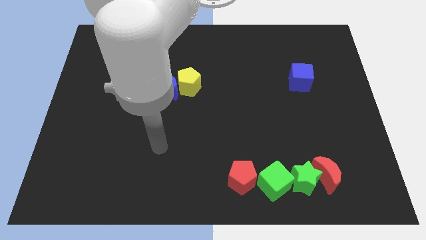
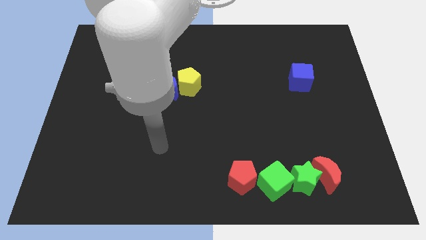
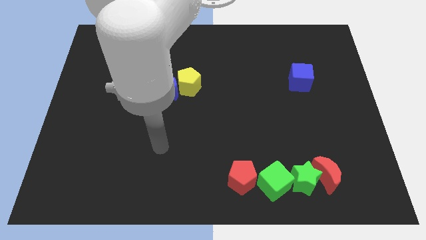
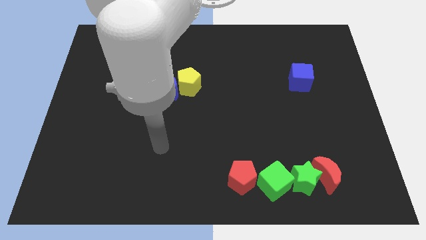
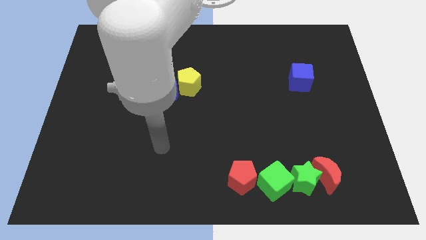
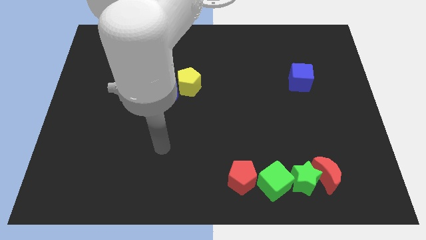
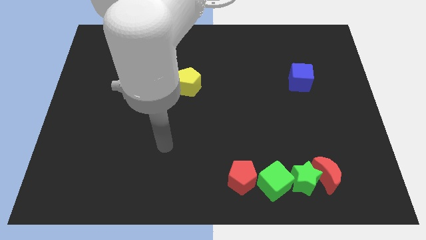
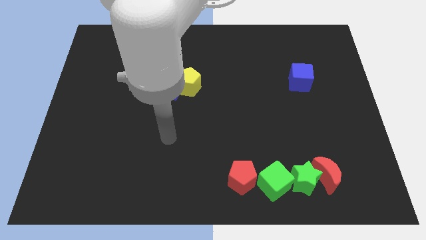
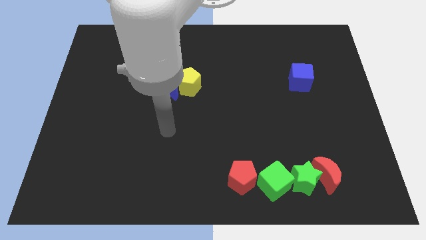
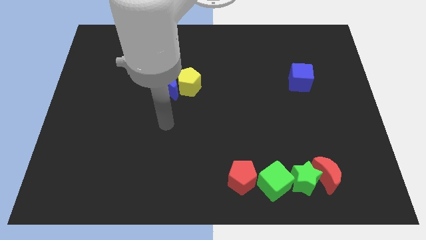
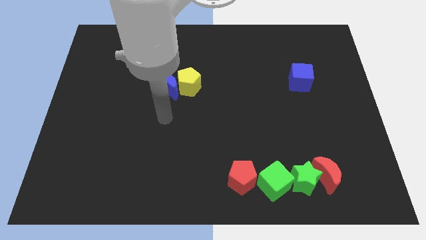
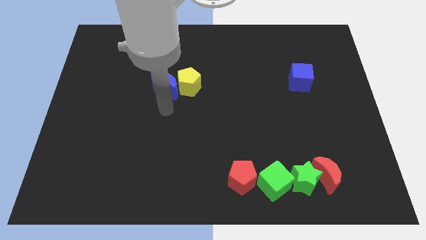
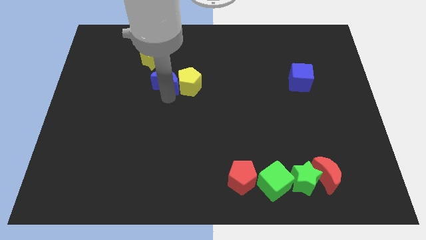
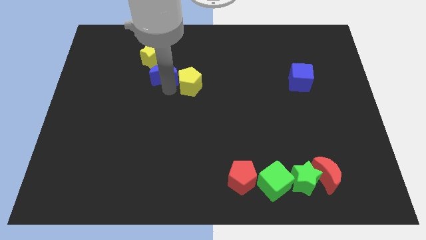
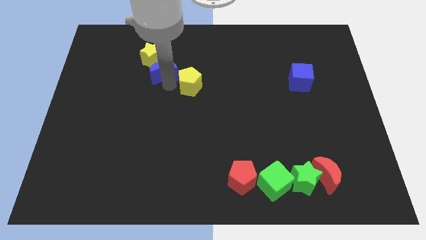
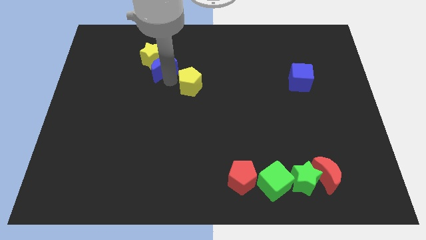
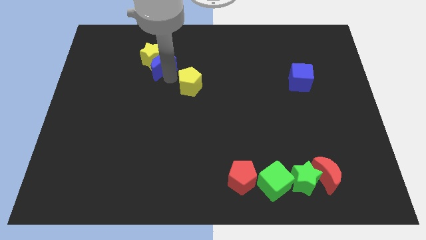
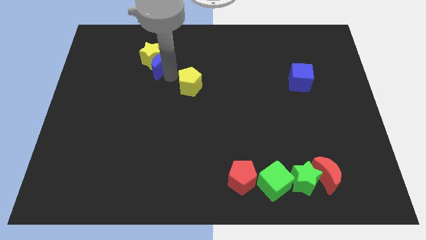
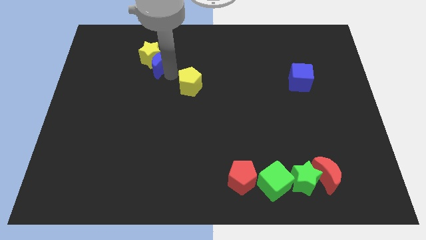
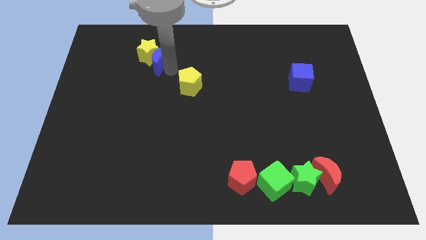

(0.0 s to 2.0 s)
push the blue moon into the yellow star

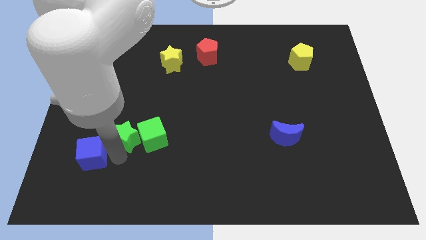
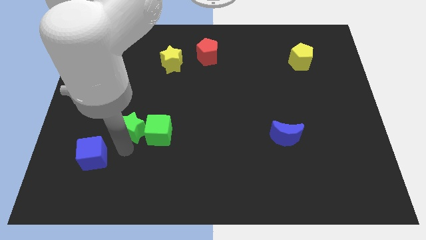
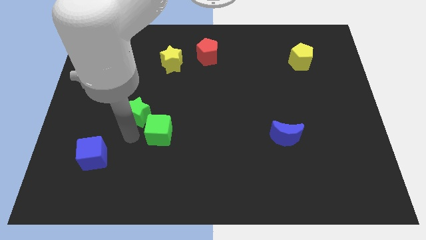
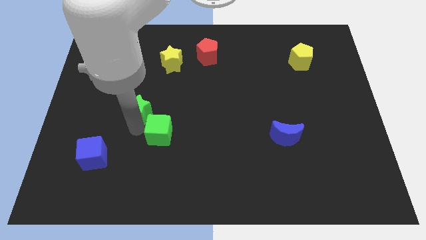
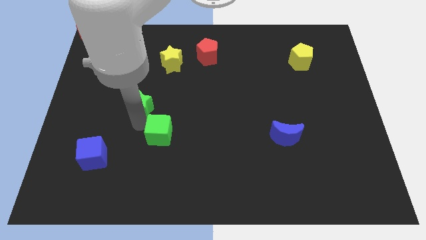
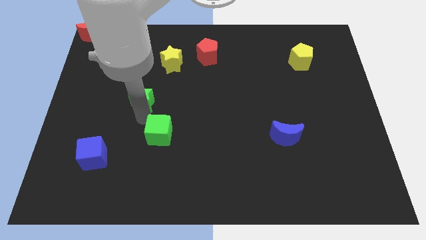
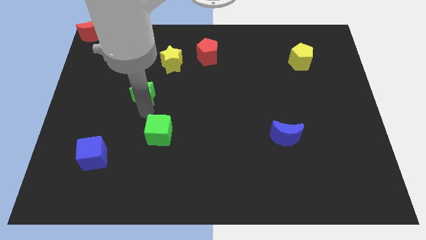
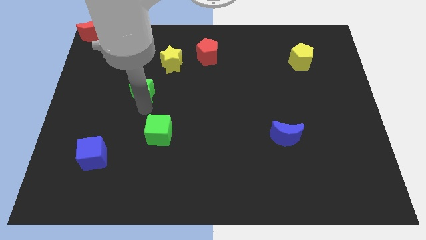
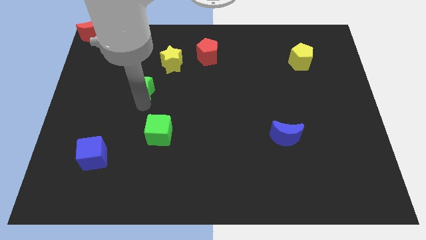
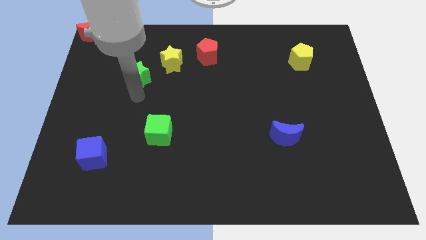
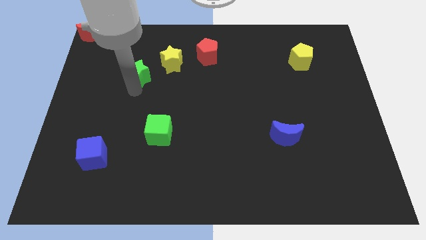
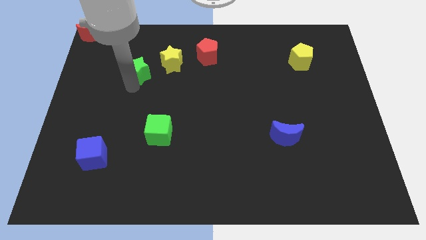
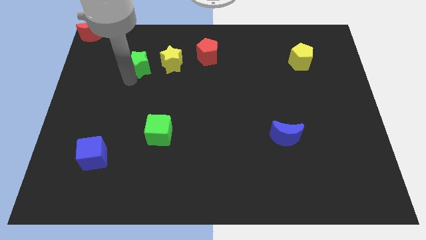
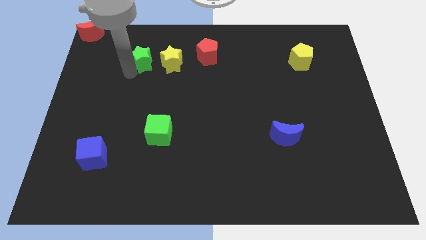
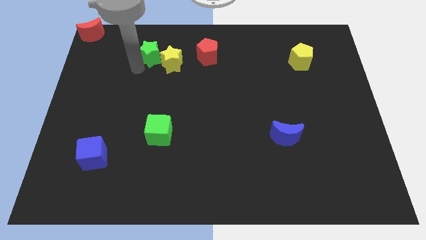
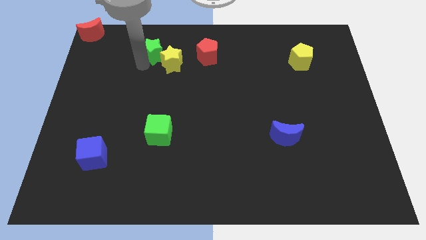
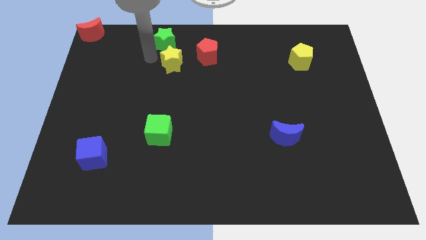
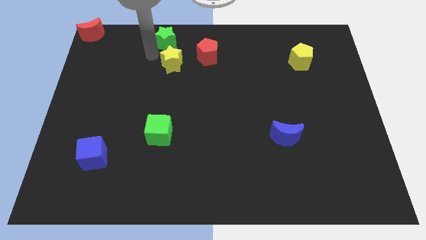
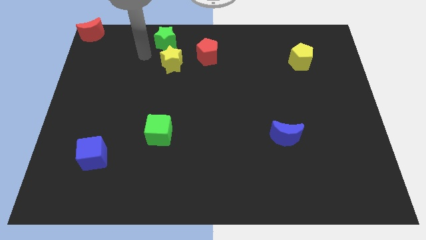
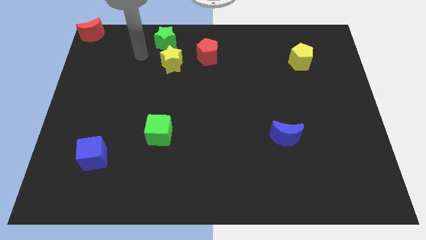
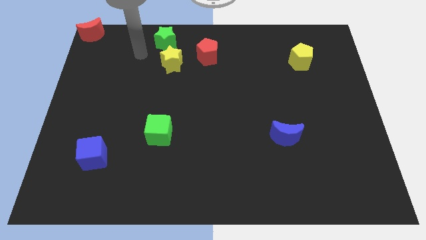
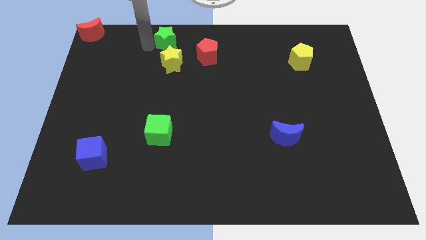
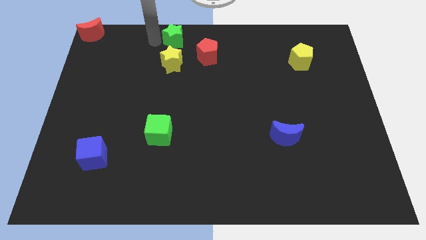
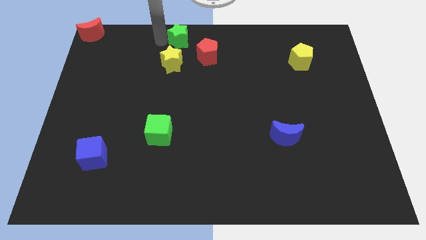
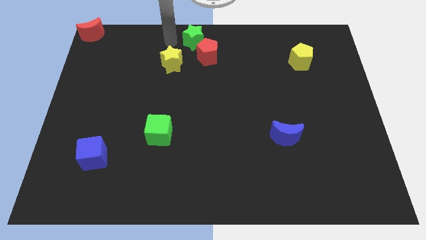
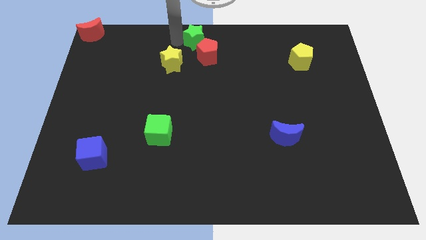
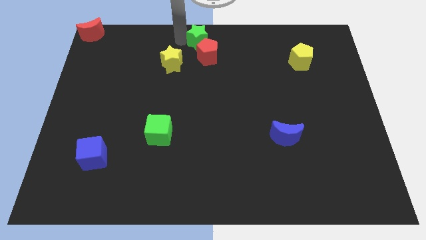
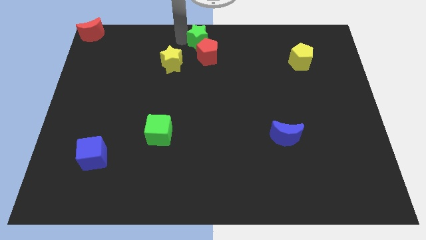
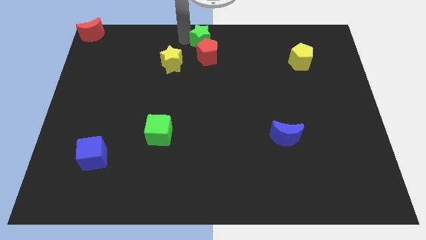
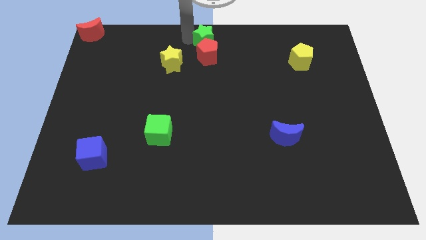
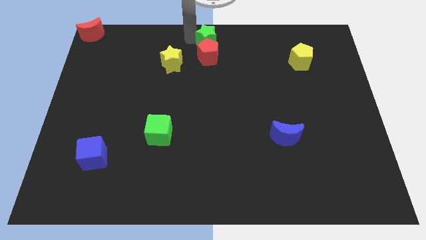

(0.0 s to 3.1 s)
place the green star above the red pentagon

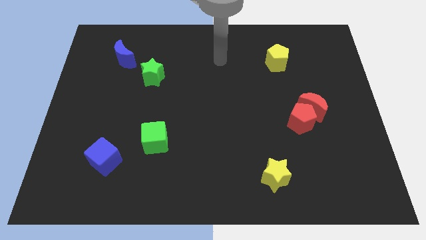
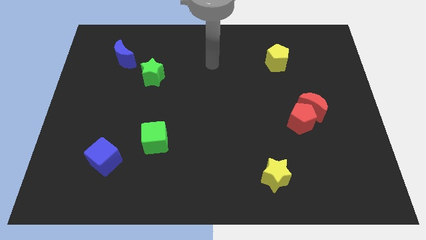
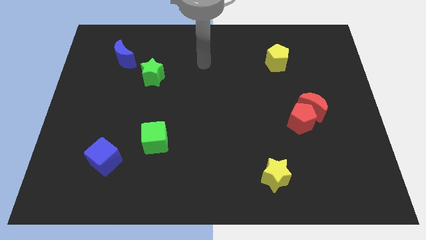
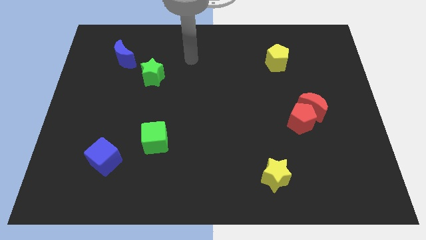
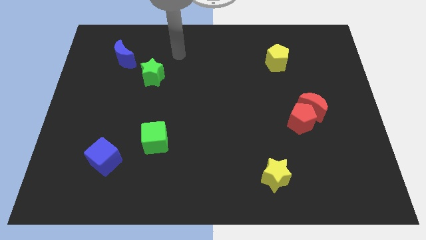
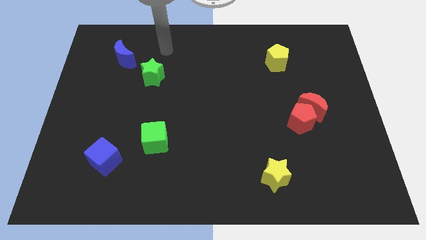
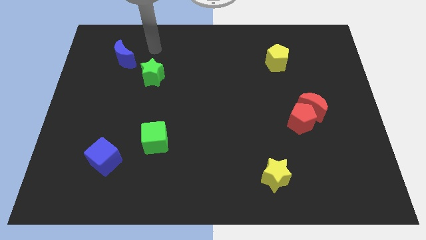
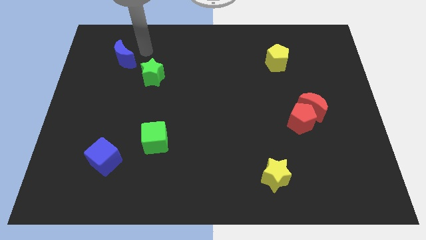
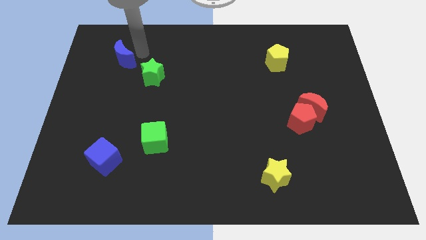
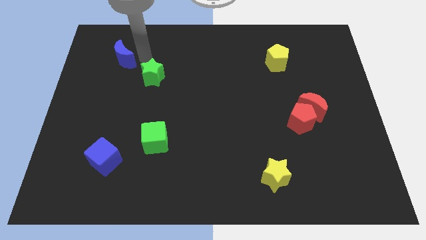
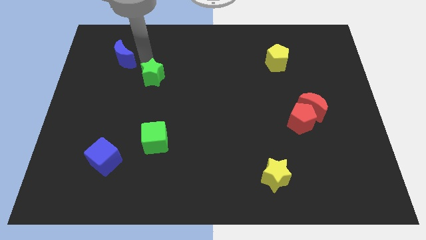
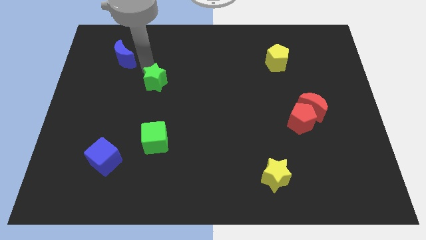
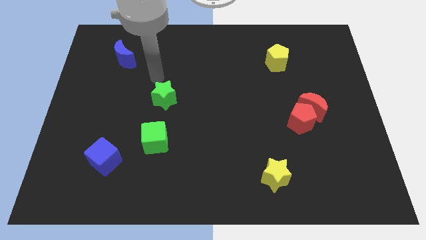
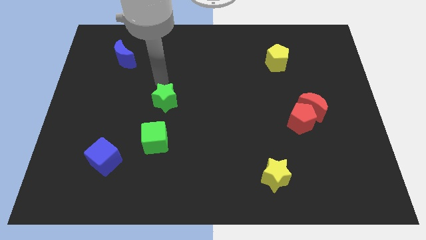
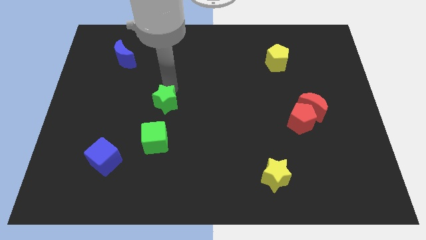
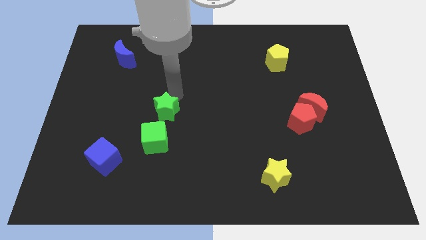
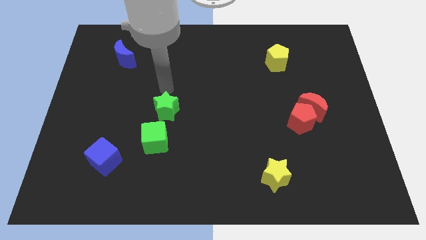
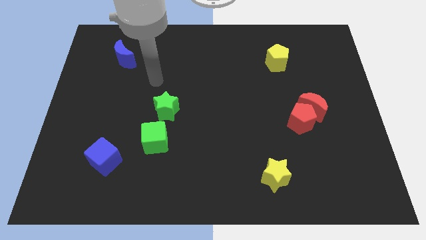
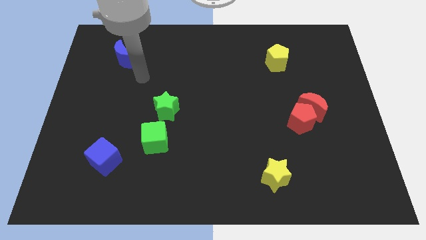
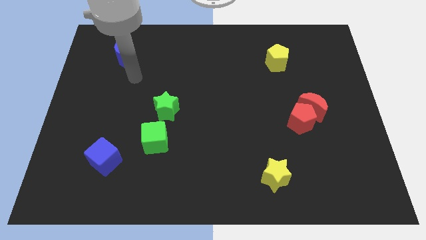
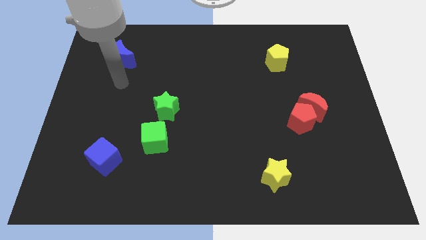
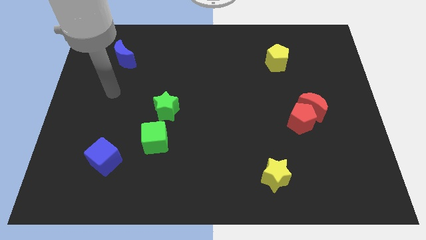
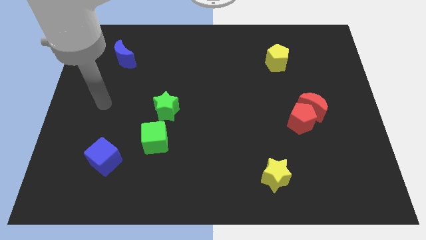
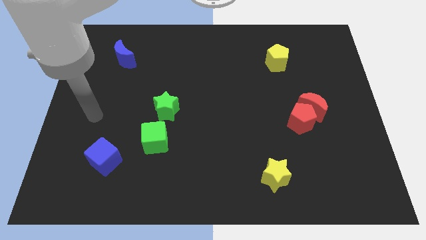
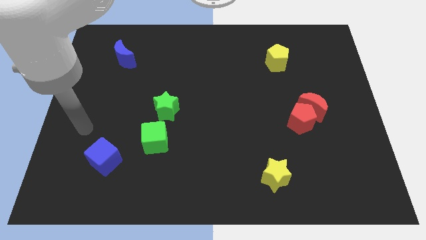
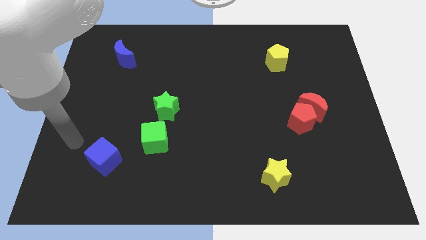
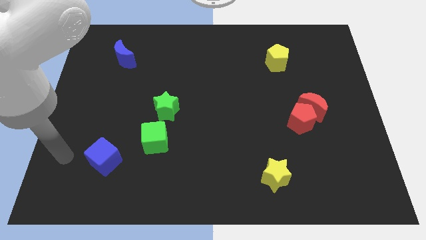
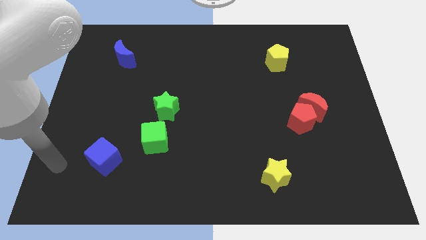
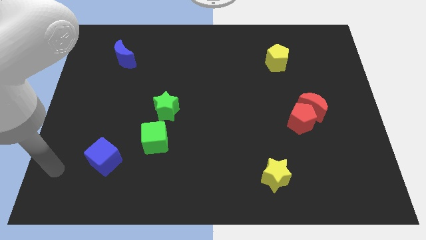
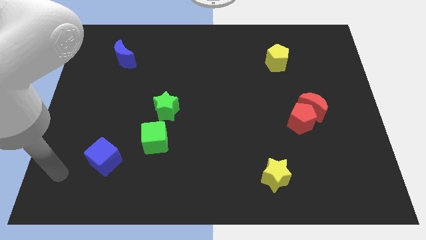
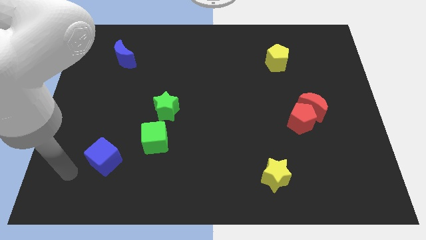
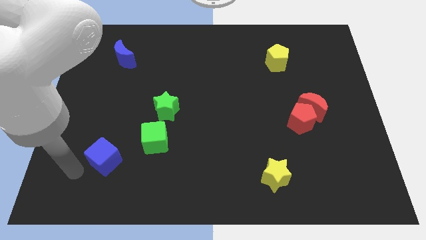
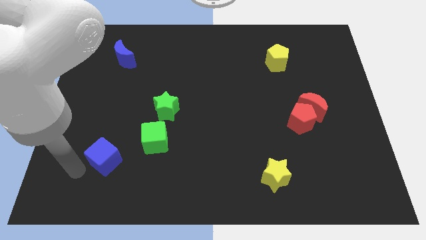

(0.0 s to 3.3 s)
push the green star towards the green cube

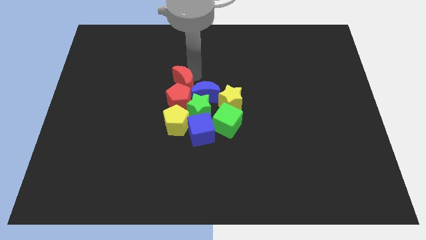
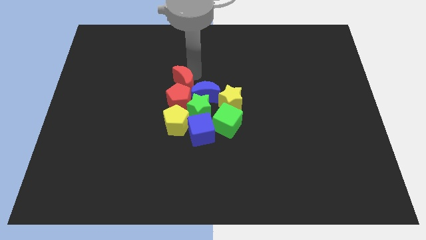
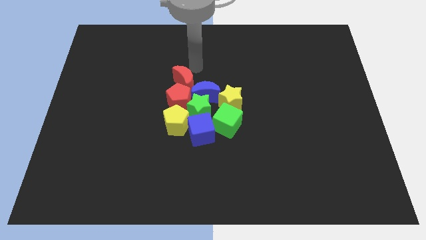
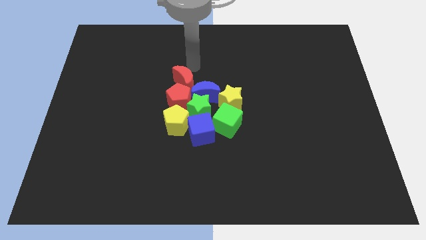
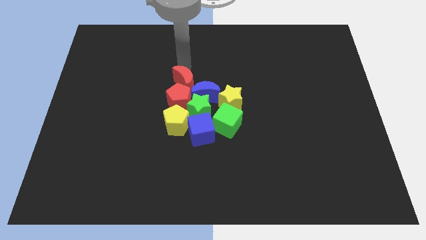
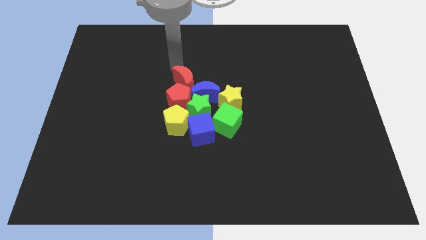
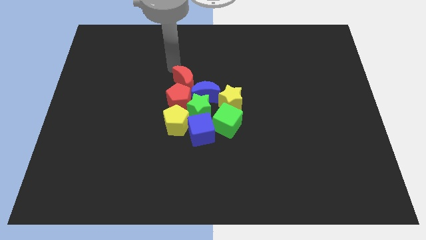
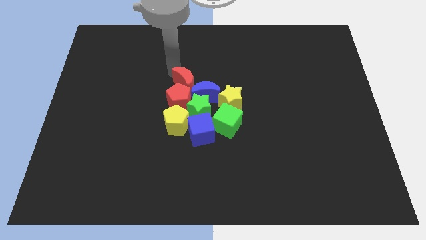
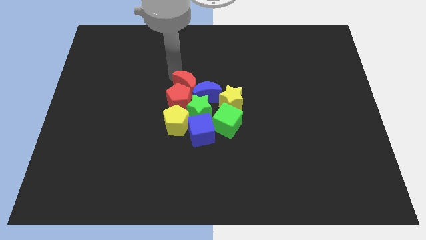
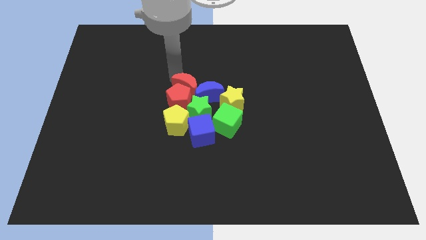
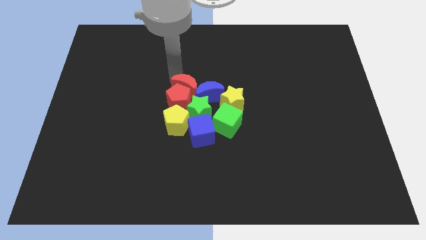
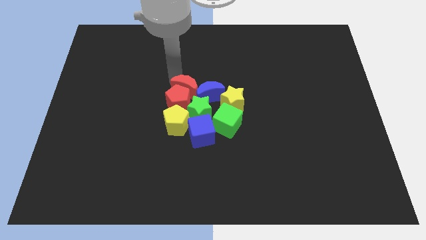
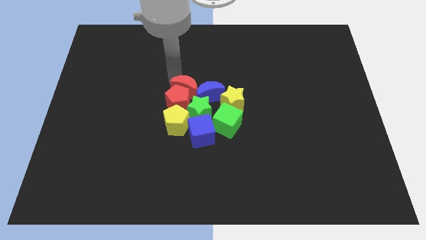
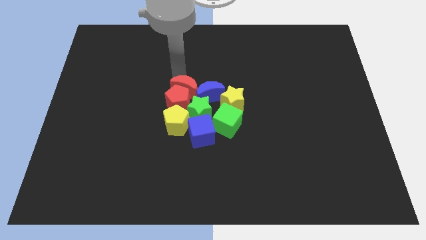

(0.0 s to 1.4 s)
push the red crescent to the top of the red pentagon
